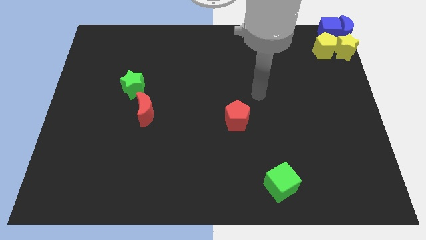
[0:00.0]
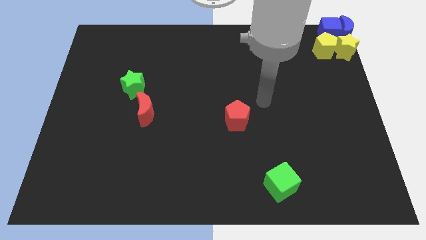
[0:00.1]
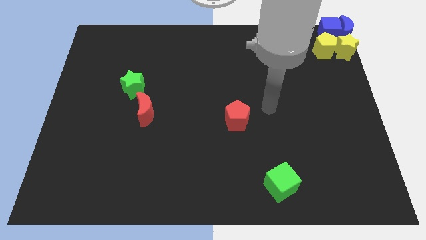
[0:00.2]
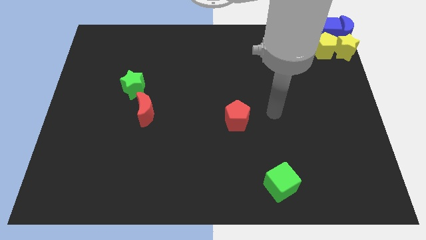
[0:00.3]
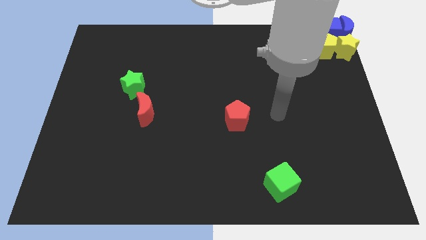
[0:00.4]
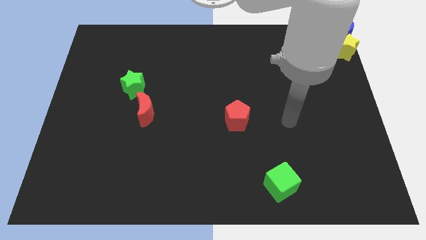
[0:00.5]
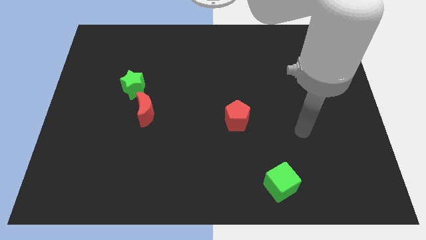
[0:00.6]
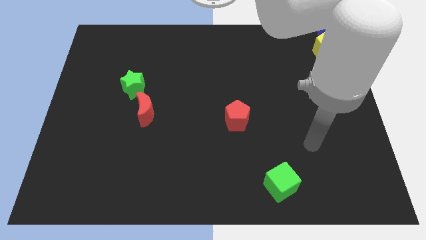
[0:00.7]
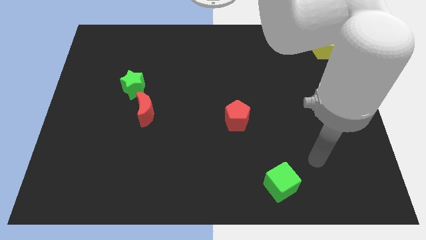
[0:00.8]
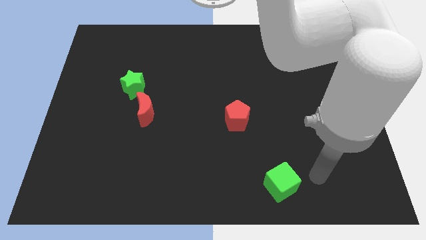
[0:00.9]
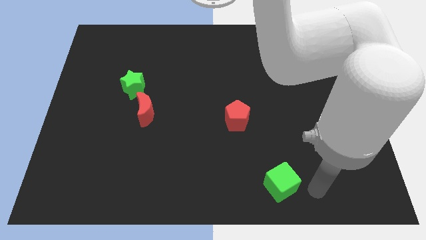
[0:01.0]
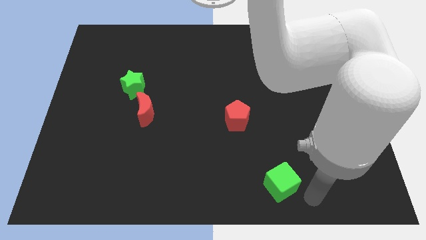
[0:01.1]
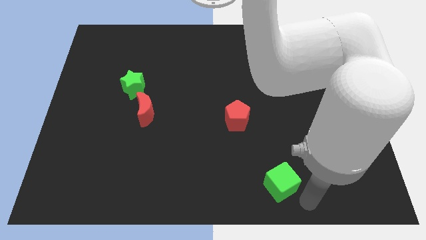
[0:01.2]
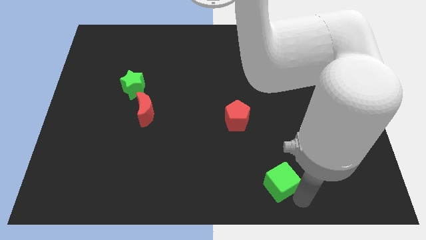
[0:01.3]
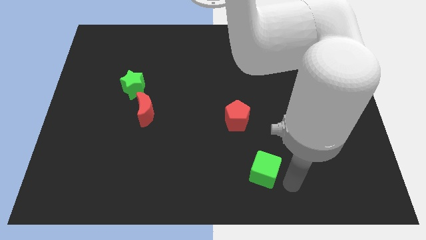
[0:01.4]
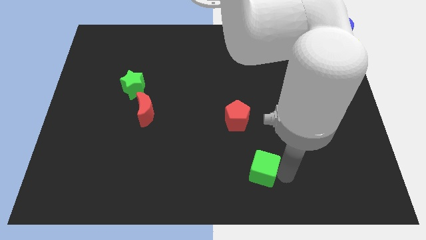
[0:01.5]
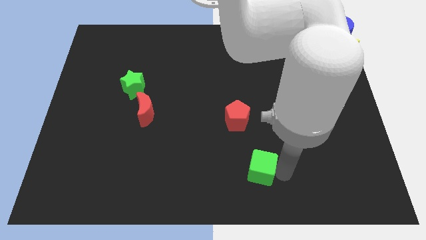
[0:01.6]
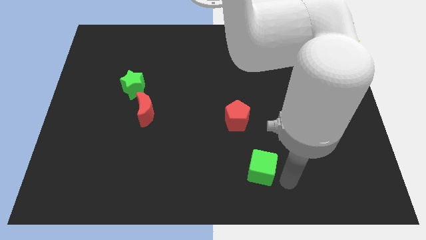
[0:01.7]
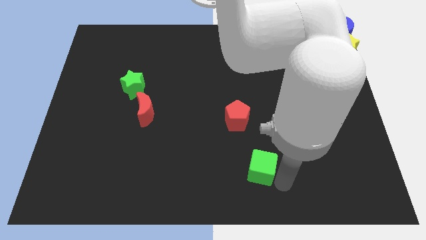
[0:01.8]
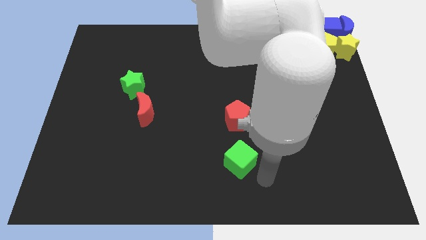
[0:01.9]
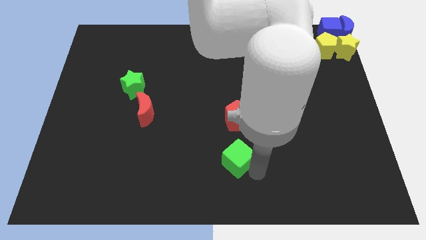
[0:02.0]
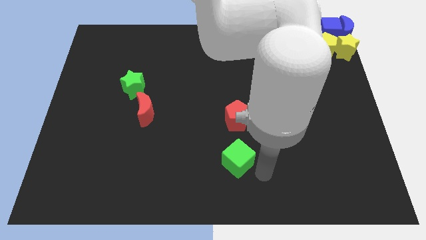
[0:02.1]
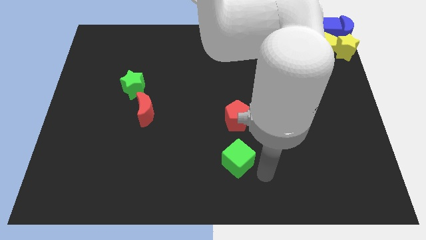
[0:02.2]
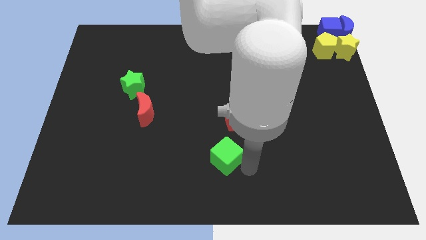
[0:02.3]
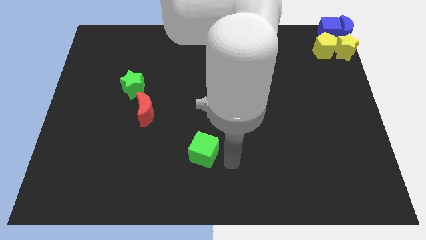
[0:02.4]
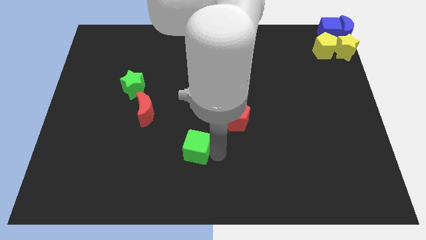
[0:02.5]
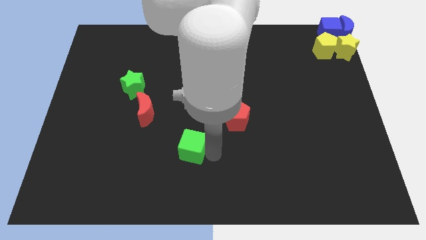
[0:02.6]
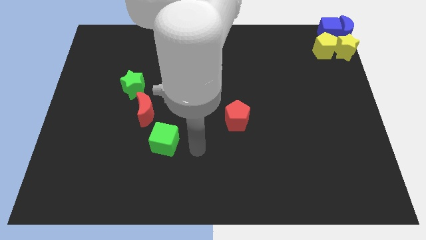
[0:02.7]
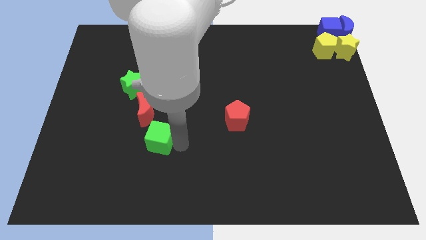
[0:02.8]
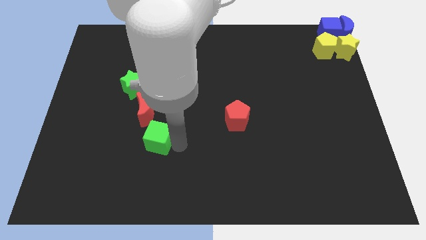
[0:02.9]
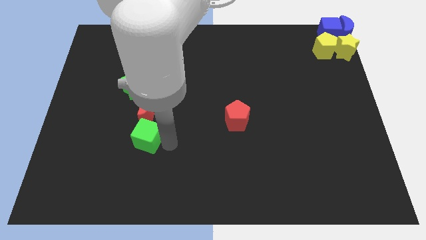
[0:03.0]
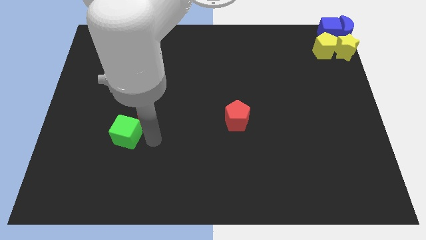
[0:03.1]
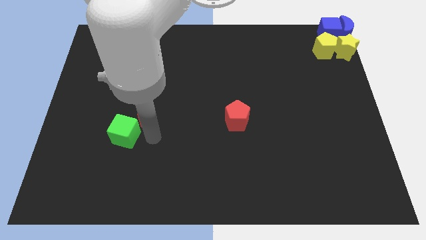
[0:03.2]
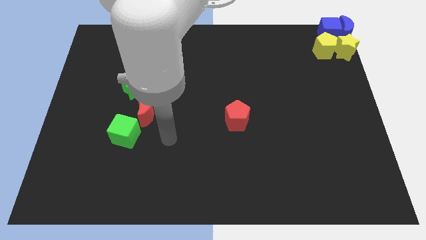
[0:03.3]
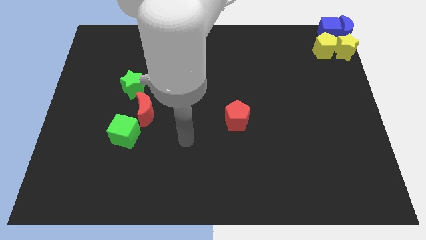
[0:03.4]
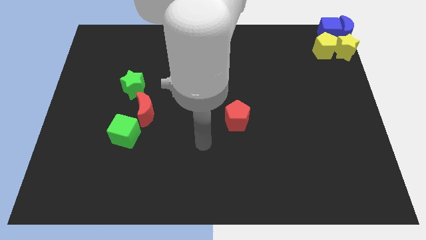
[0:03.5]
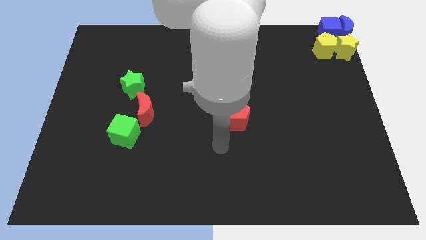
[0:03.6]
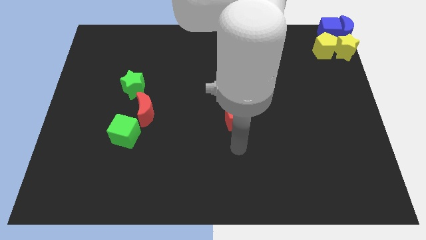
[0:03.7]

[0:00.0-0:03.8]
place the green cube below the red moon

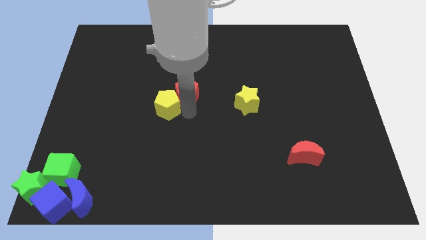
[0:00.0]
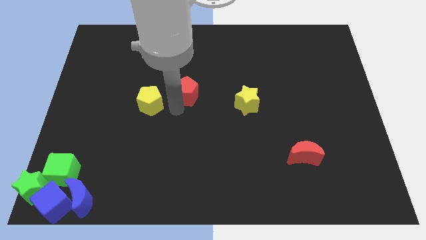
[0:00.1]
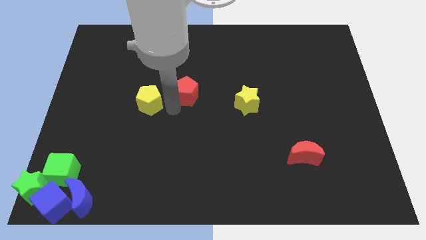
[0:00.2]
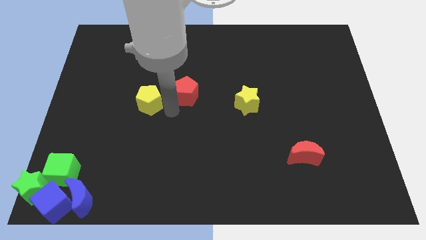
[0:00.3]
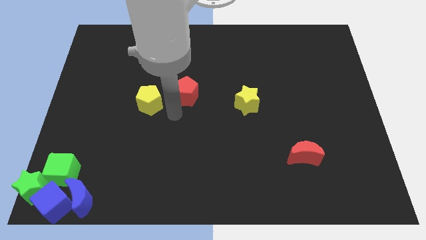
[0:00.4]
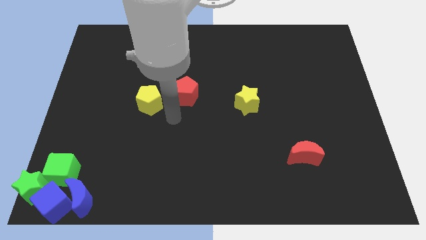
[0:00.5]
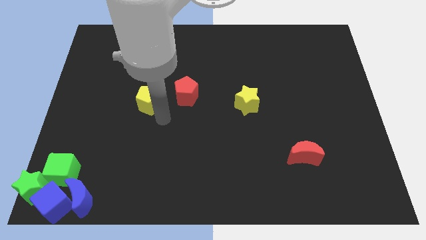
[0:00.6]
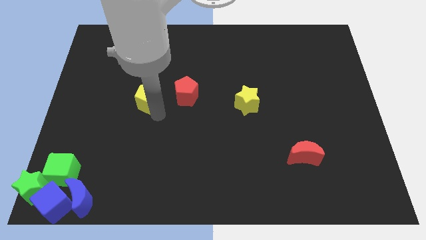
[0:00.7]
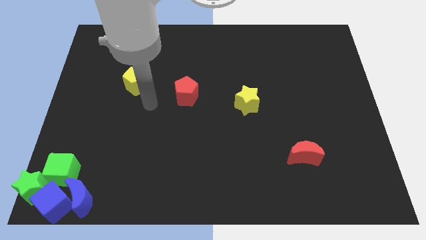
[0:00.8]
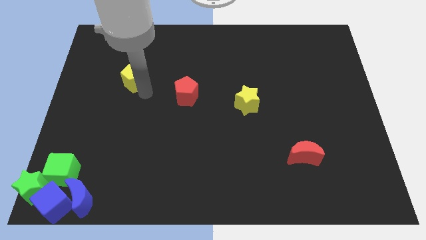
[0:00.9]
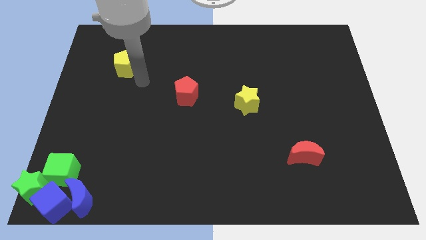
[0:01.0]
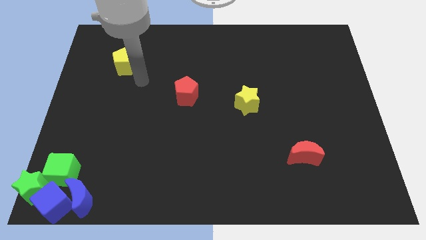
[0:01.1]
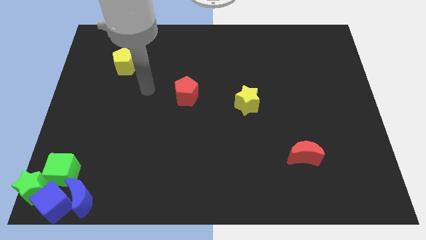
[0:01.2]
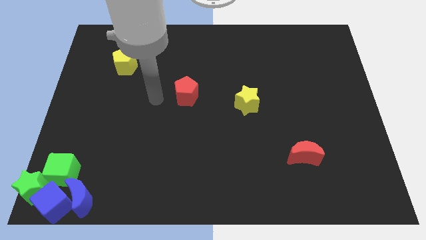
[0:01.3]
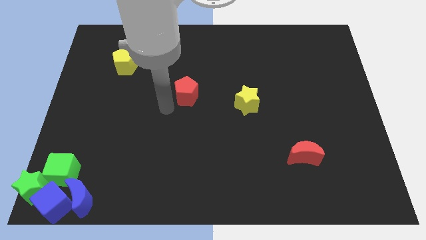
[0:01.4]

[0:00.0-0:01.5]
separate yellow pentagon from the red pentagon

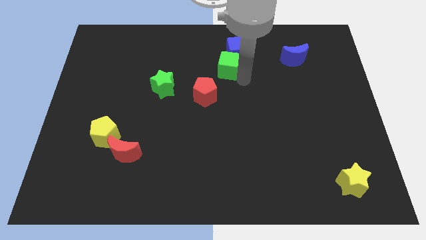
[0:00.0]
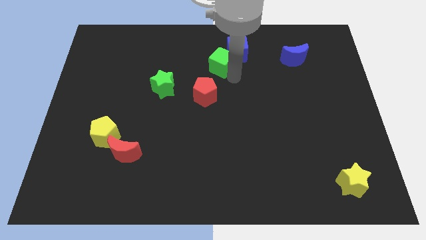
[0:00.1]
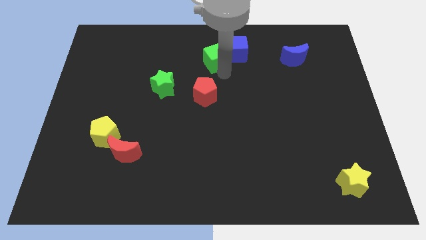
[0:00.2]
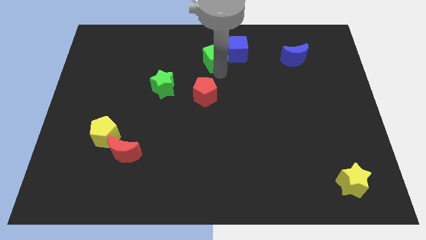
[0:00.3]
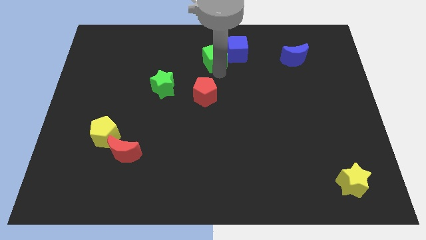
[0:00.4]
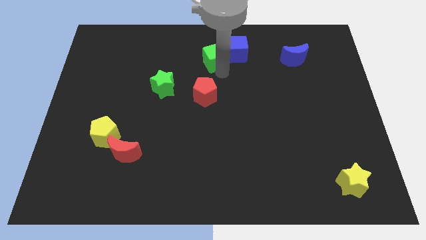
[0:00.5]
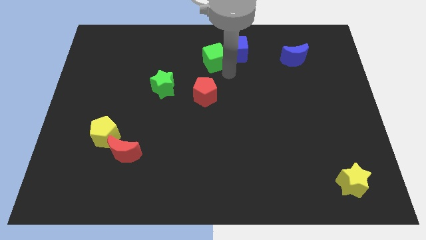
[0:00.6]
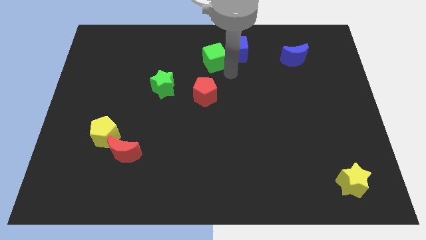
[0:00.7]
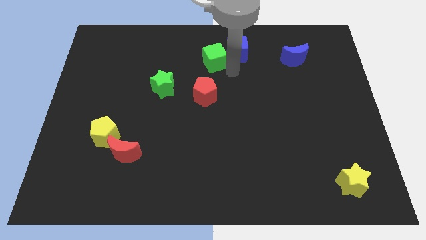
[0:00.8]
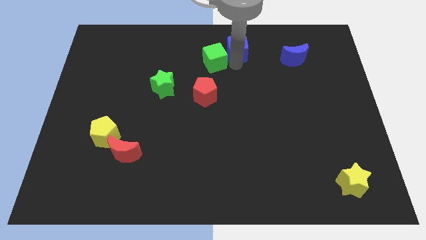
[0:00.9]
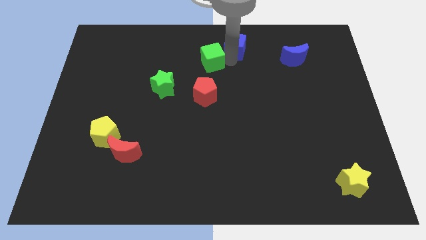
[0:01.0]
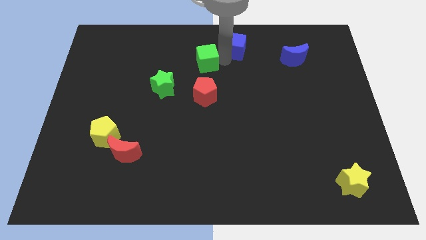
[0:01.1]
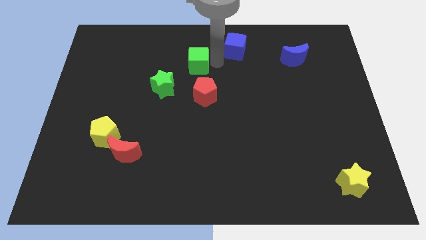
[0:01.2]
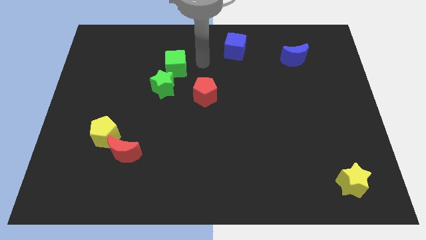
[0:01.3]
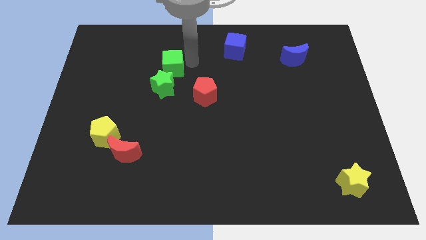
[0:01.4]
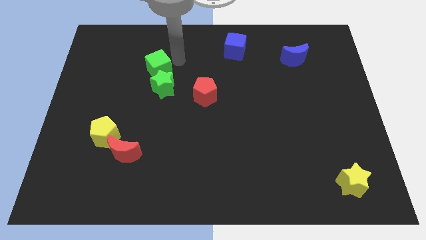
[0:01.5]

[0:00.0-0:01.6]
separate the green cube from the blue cube

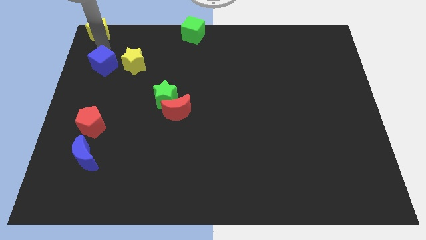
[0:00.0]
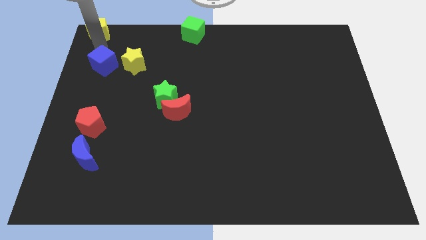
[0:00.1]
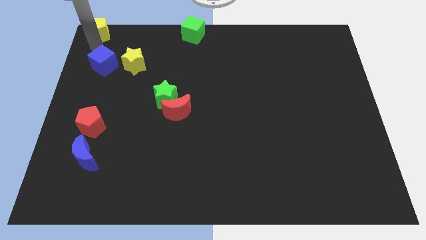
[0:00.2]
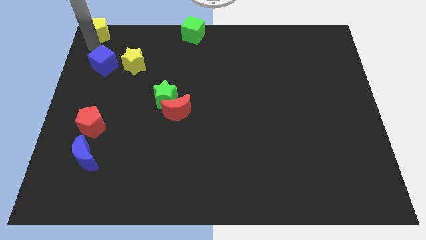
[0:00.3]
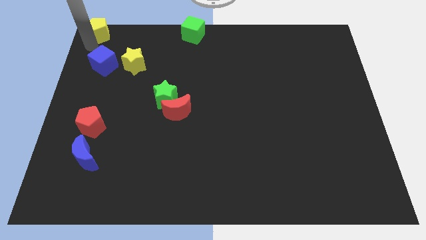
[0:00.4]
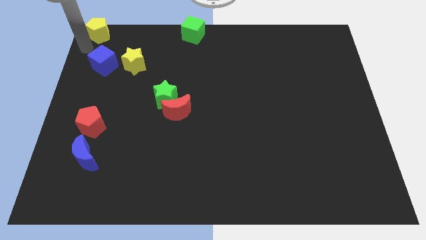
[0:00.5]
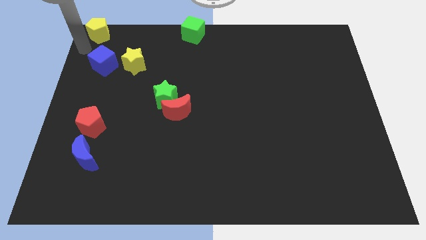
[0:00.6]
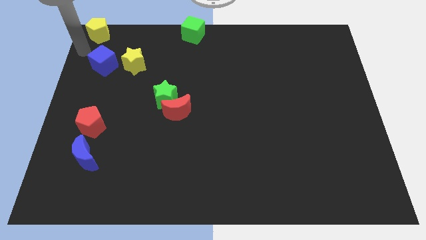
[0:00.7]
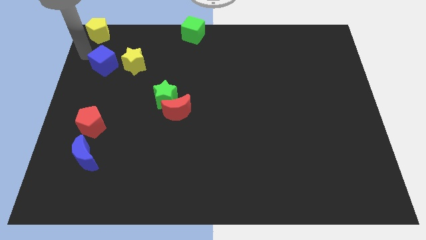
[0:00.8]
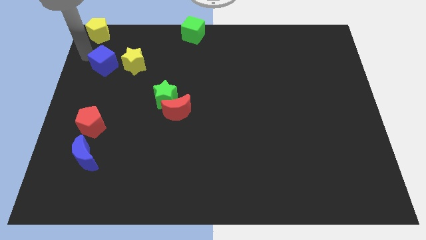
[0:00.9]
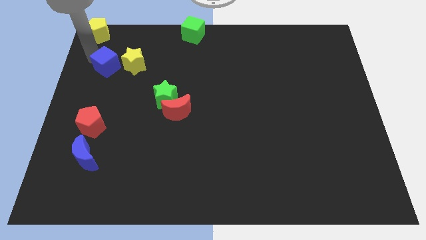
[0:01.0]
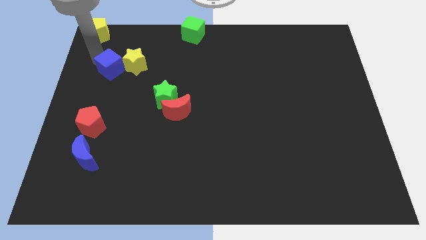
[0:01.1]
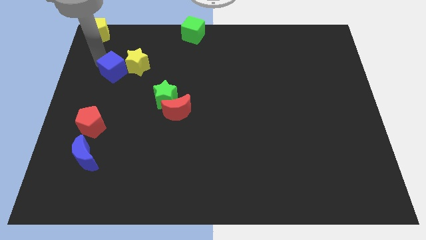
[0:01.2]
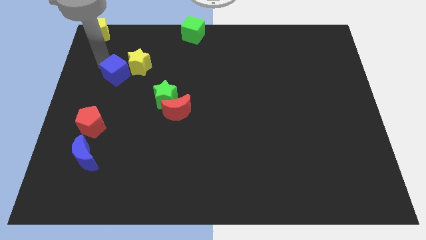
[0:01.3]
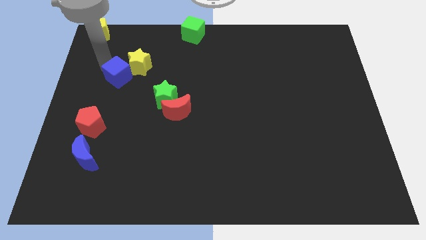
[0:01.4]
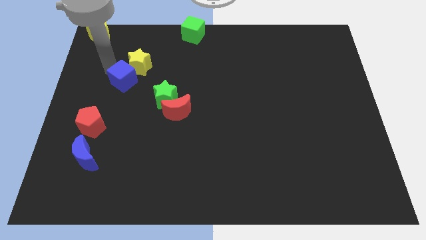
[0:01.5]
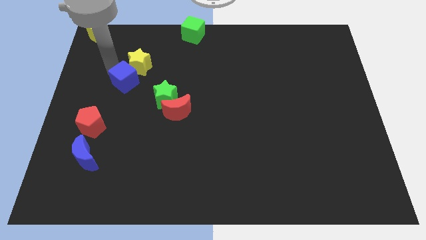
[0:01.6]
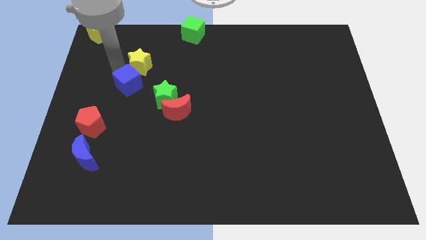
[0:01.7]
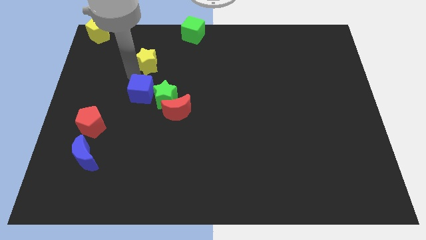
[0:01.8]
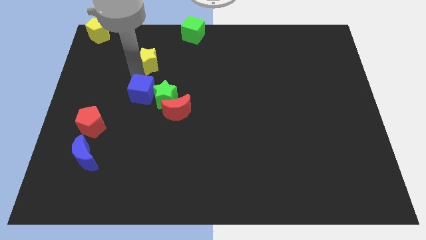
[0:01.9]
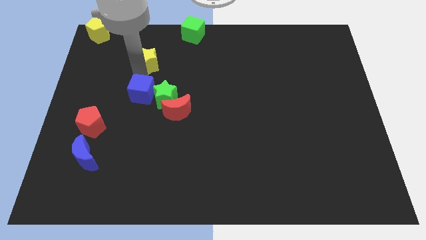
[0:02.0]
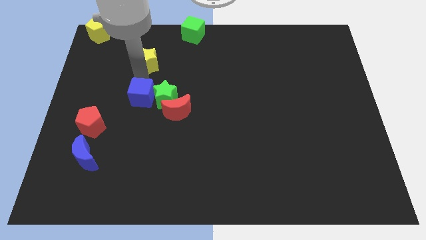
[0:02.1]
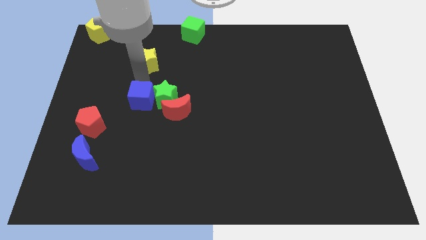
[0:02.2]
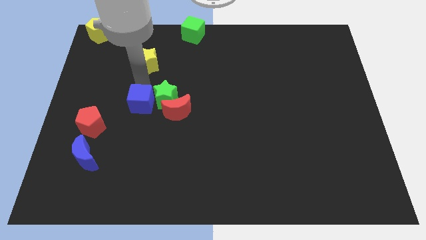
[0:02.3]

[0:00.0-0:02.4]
move the blue cube to the left side of the green star
